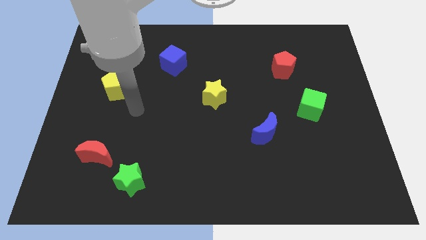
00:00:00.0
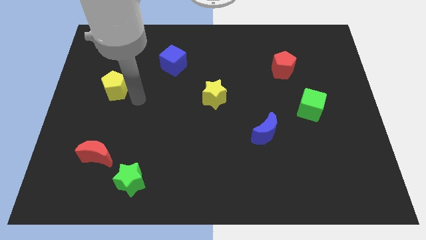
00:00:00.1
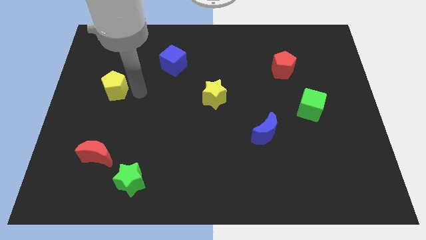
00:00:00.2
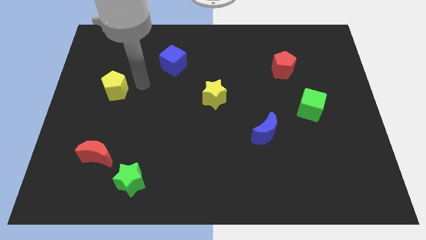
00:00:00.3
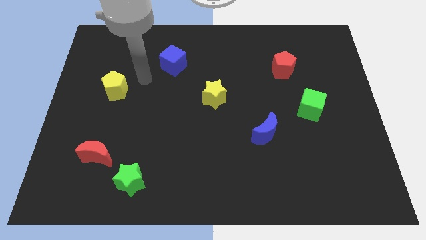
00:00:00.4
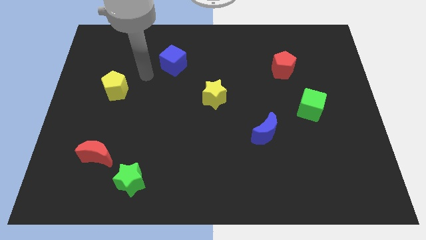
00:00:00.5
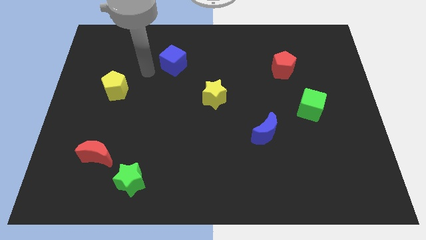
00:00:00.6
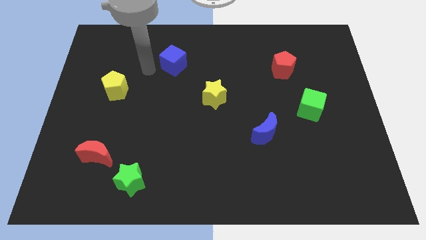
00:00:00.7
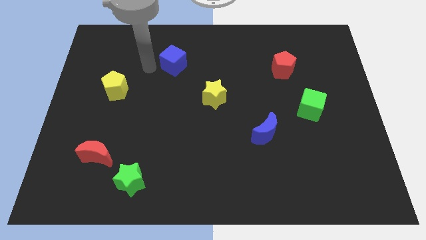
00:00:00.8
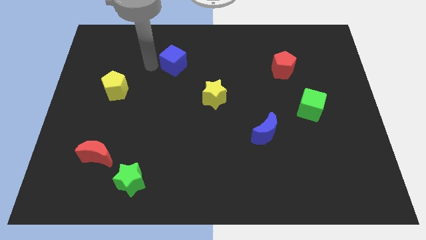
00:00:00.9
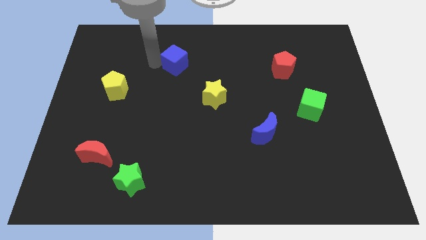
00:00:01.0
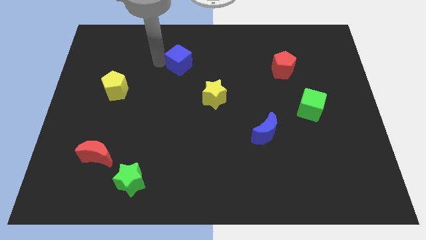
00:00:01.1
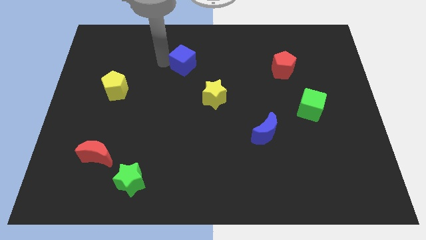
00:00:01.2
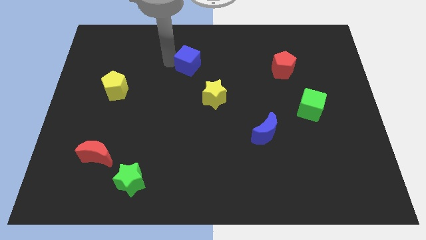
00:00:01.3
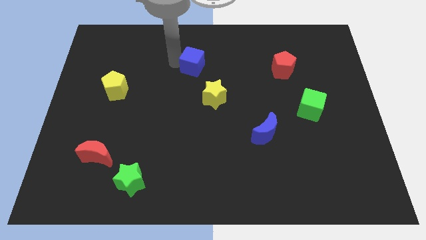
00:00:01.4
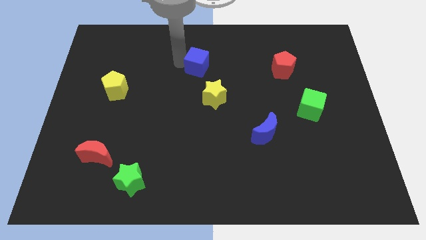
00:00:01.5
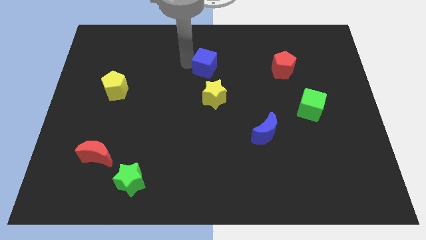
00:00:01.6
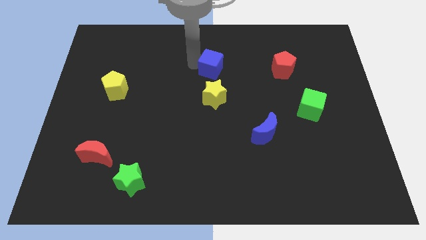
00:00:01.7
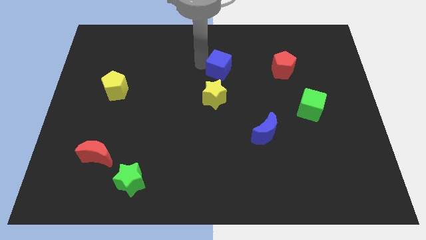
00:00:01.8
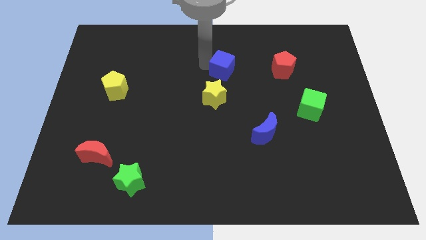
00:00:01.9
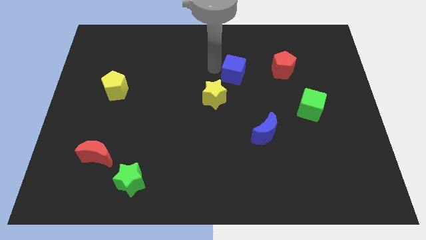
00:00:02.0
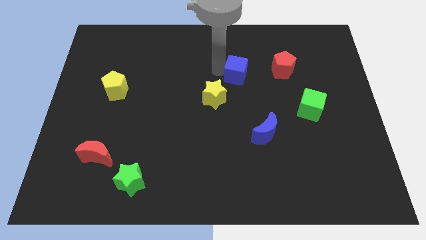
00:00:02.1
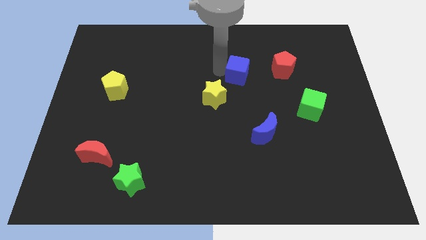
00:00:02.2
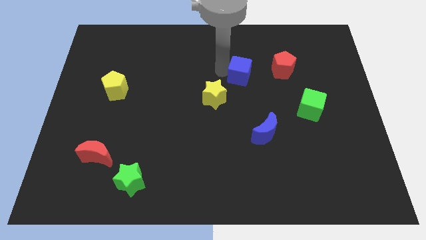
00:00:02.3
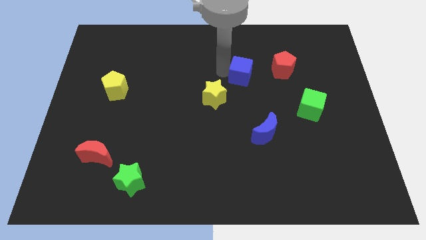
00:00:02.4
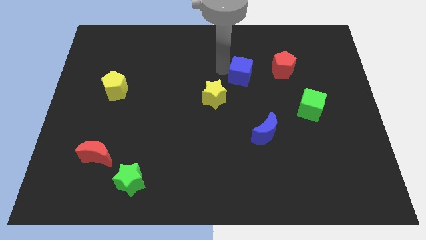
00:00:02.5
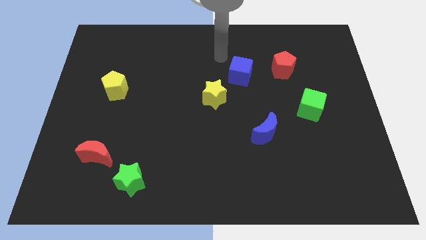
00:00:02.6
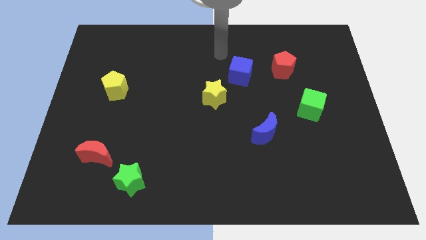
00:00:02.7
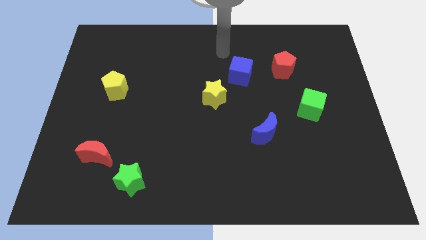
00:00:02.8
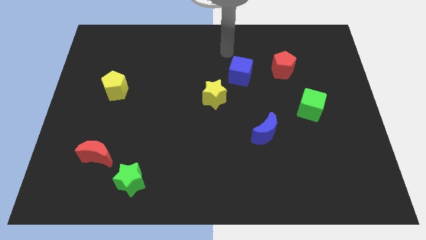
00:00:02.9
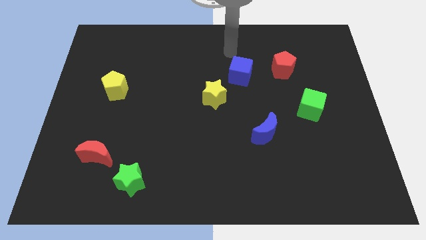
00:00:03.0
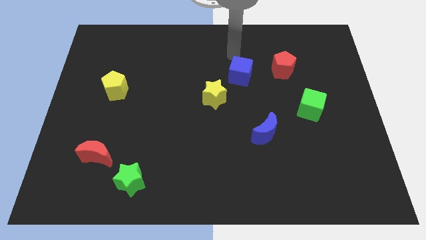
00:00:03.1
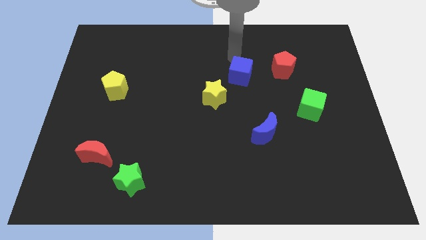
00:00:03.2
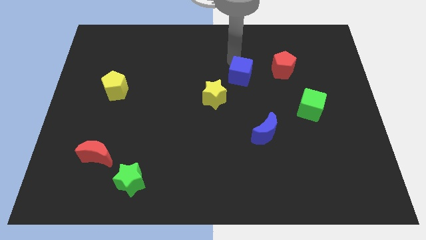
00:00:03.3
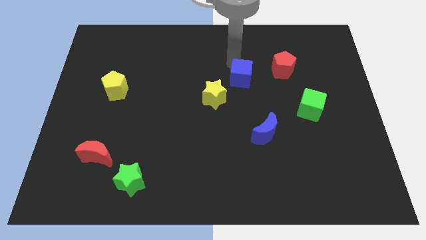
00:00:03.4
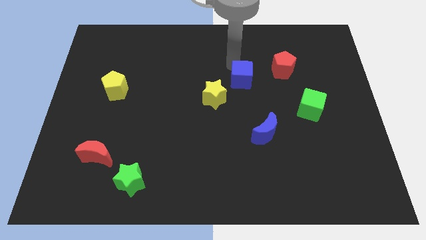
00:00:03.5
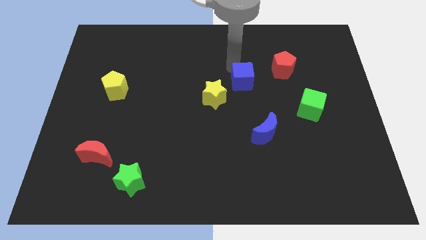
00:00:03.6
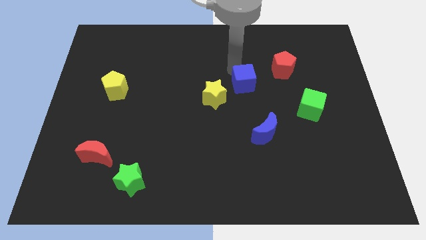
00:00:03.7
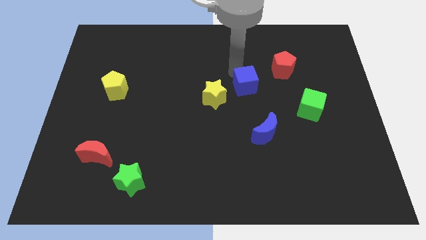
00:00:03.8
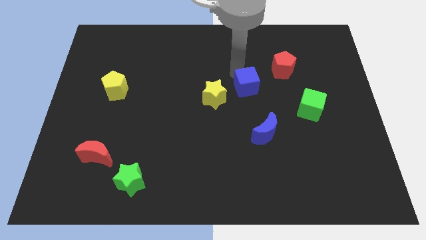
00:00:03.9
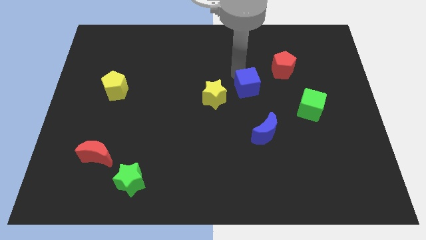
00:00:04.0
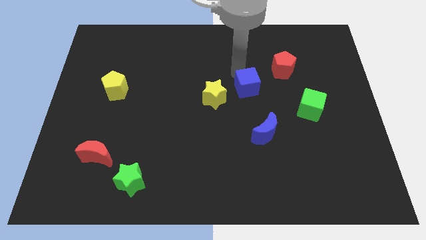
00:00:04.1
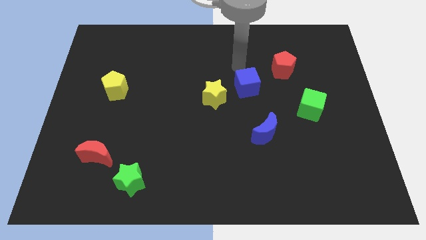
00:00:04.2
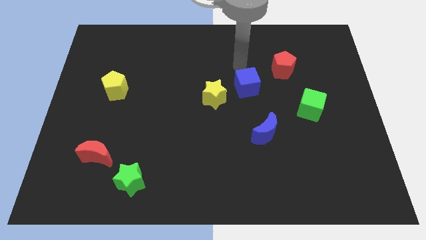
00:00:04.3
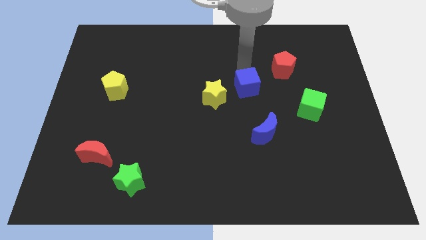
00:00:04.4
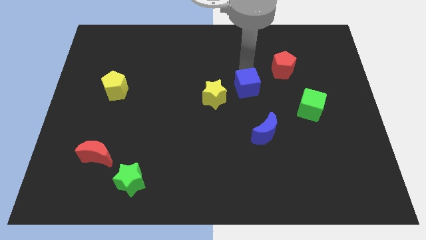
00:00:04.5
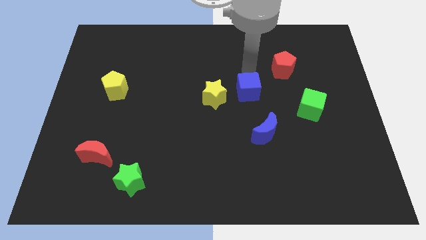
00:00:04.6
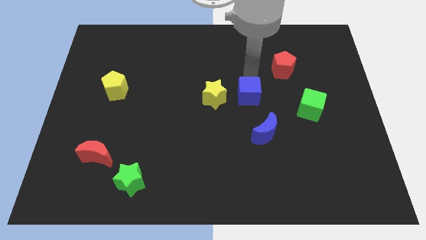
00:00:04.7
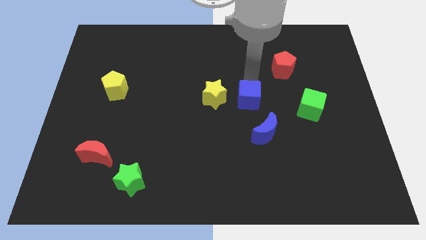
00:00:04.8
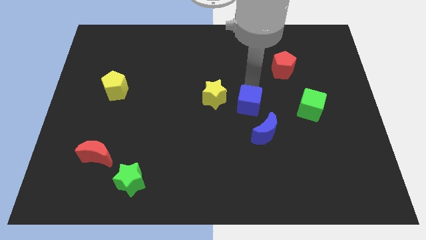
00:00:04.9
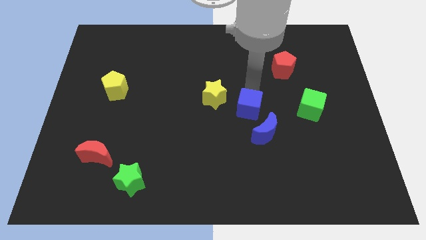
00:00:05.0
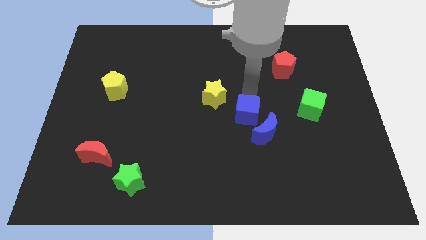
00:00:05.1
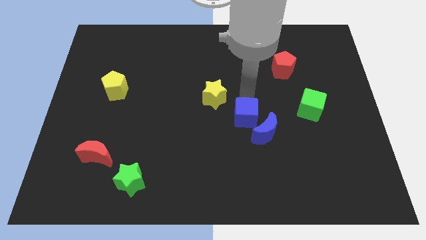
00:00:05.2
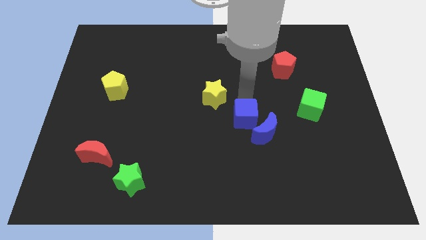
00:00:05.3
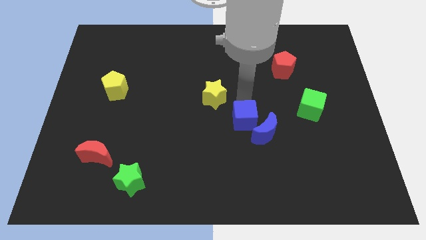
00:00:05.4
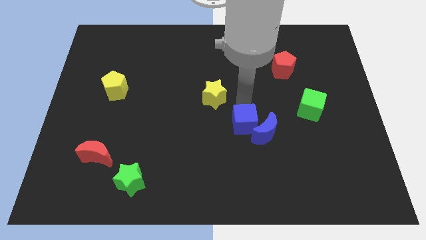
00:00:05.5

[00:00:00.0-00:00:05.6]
push the blue cube to the blue moon

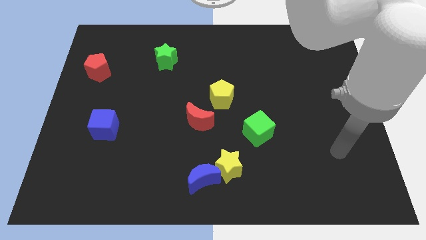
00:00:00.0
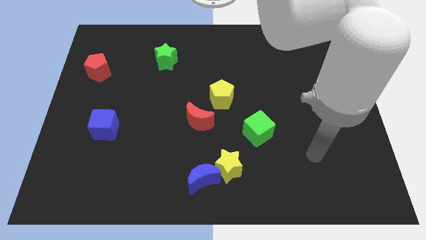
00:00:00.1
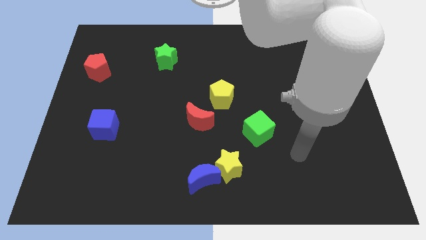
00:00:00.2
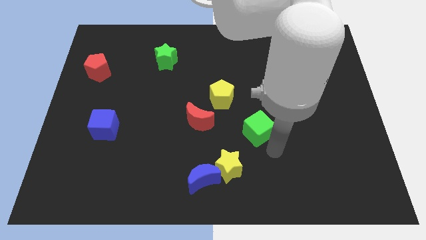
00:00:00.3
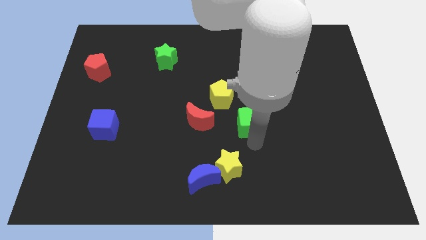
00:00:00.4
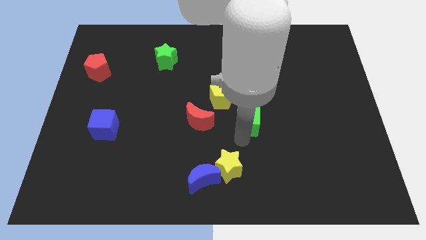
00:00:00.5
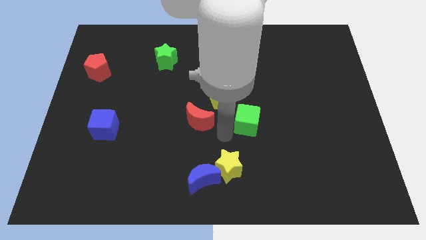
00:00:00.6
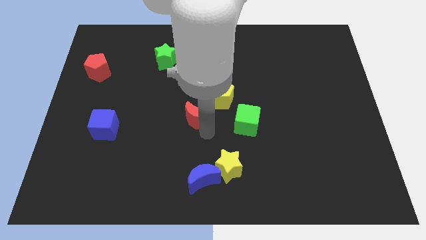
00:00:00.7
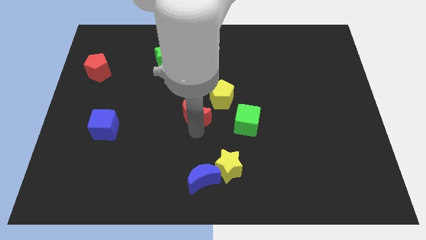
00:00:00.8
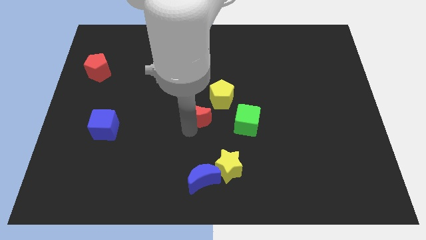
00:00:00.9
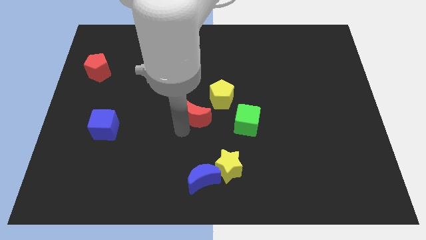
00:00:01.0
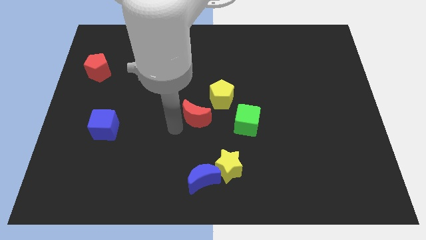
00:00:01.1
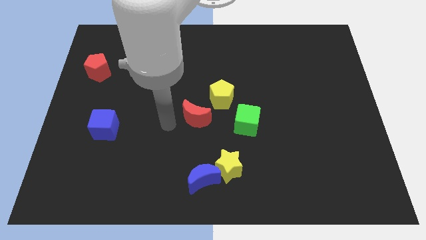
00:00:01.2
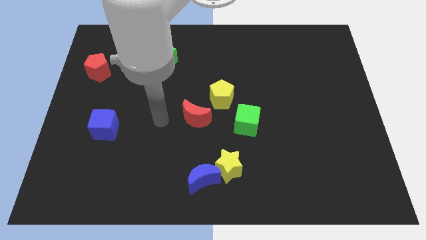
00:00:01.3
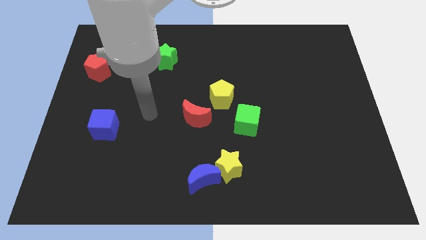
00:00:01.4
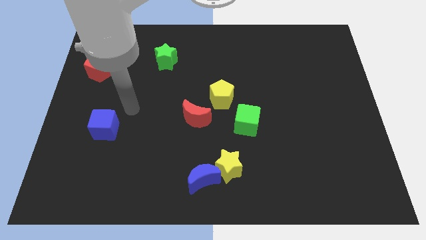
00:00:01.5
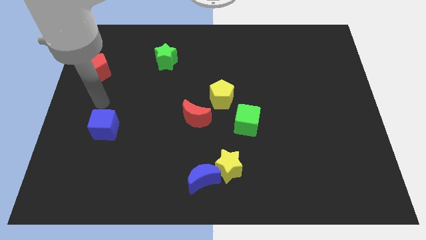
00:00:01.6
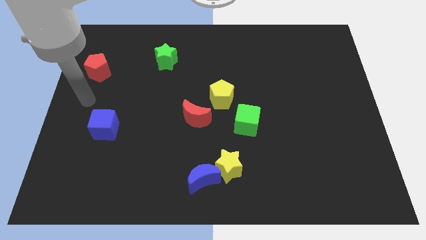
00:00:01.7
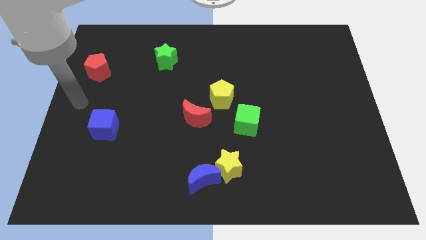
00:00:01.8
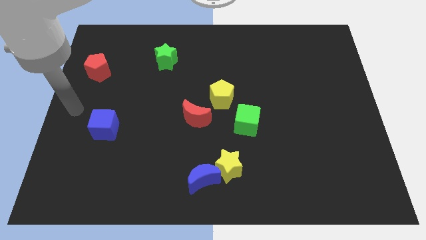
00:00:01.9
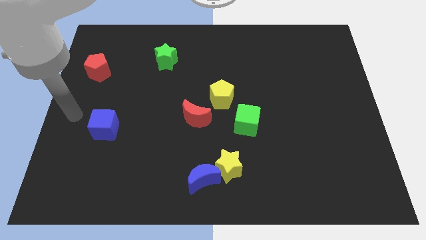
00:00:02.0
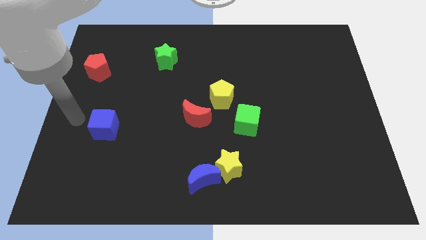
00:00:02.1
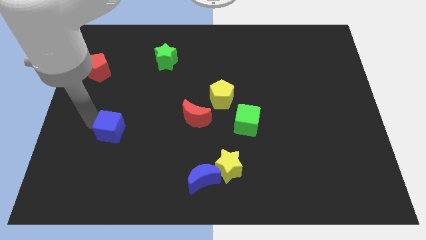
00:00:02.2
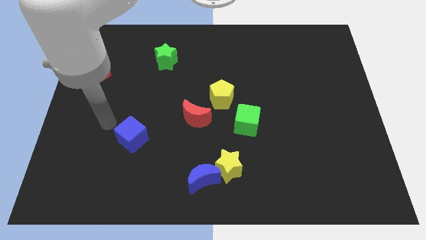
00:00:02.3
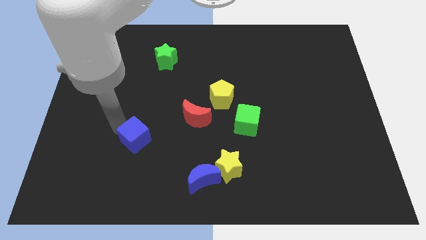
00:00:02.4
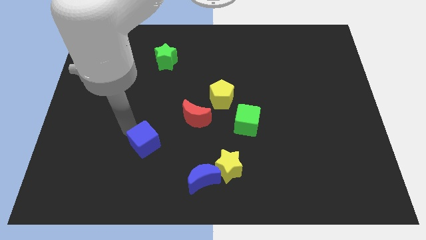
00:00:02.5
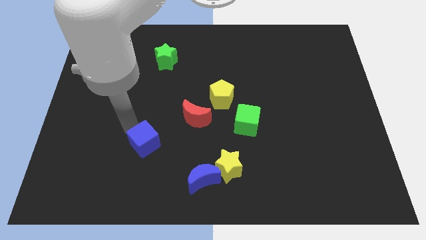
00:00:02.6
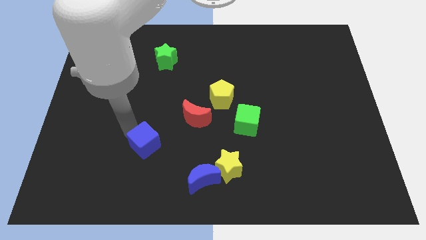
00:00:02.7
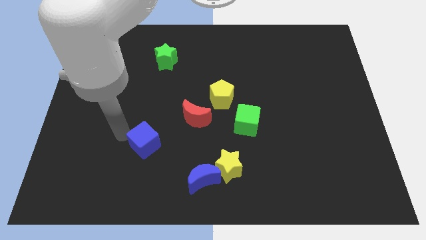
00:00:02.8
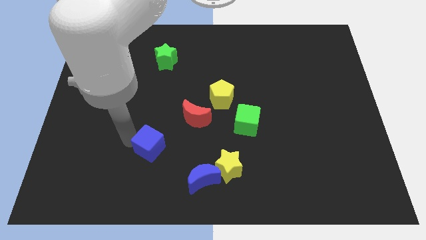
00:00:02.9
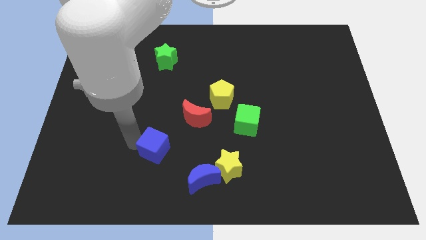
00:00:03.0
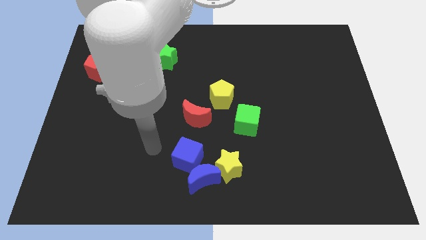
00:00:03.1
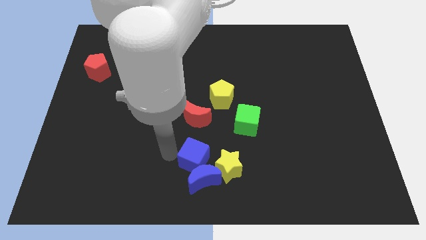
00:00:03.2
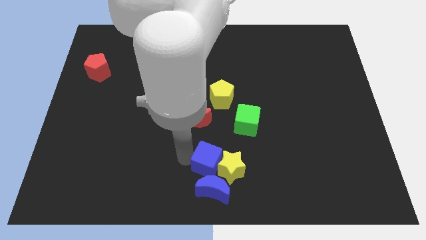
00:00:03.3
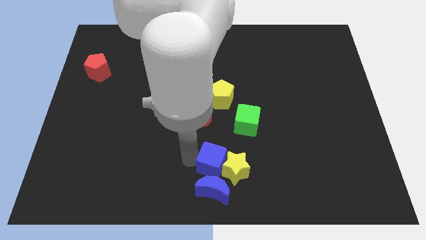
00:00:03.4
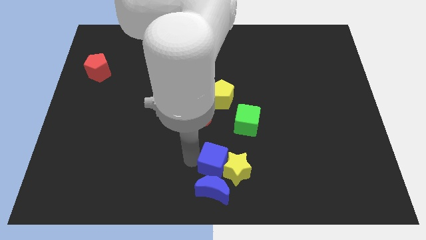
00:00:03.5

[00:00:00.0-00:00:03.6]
put the blue cube close to the yellow star
